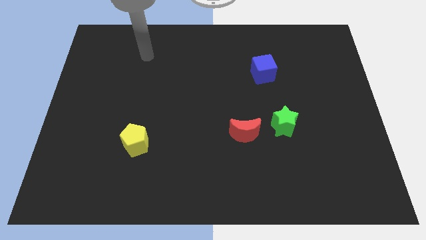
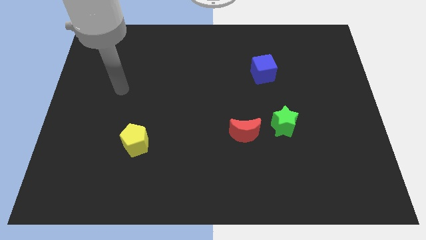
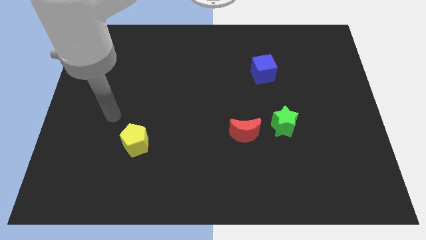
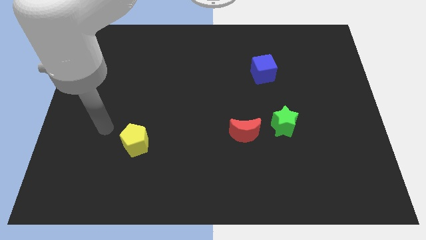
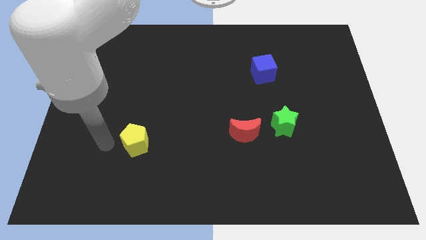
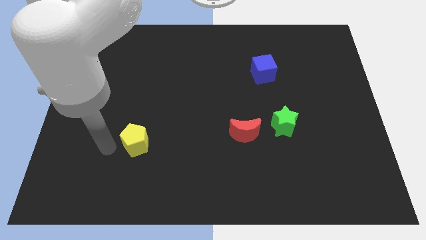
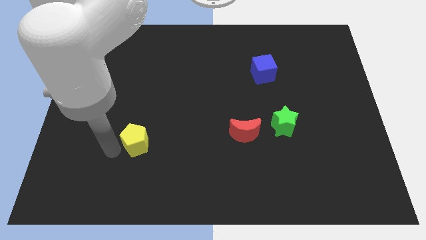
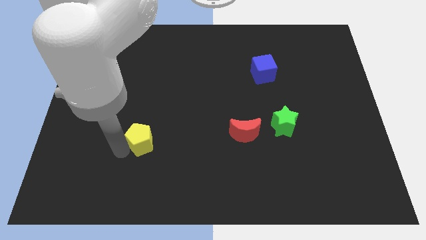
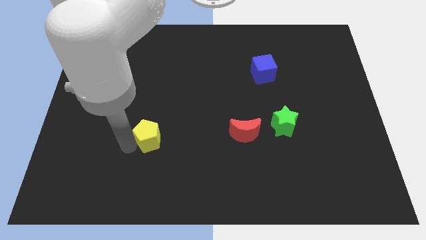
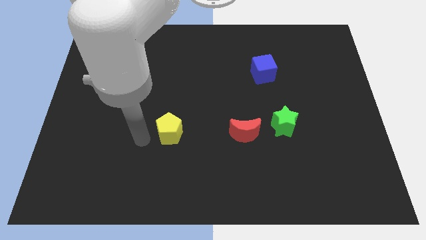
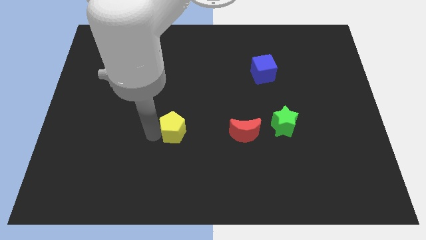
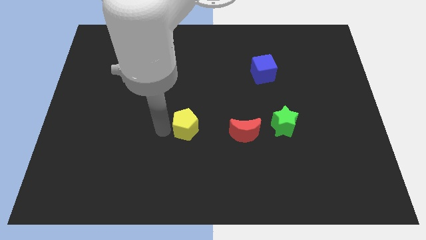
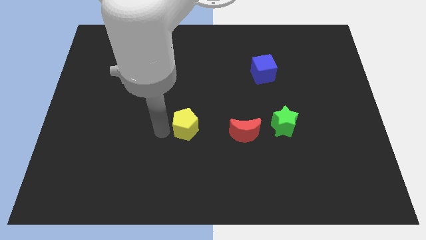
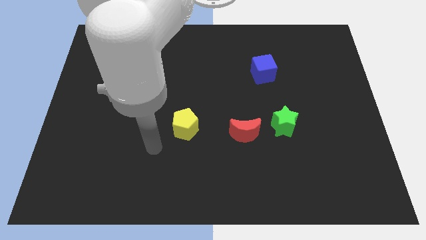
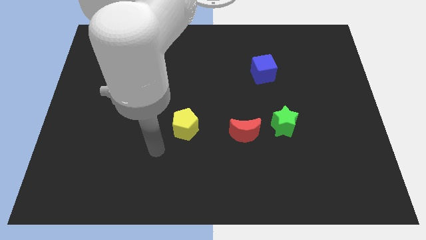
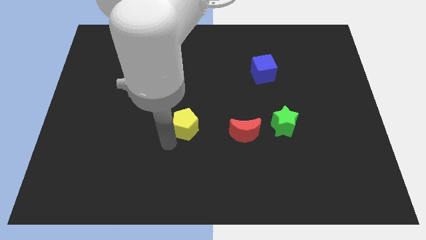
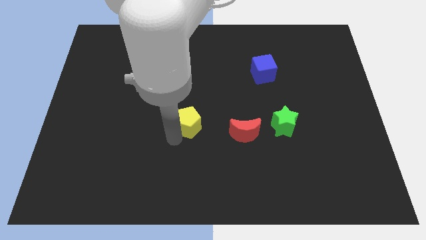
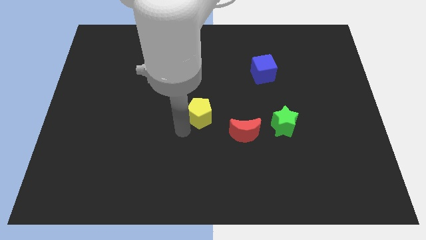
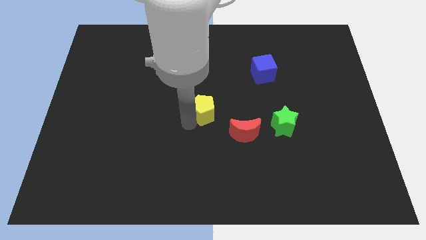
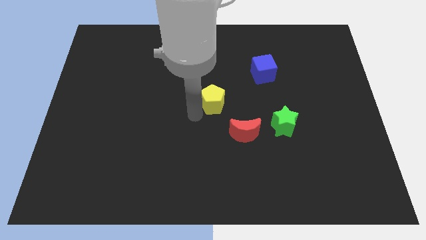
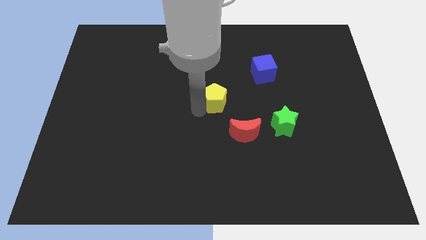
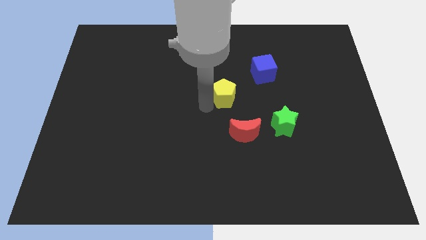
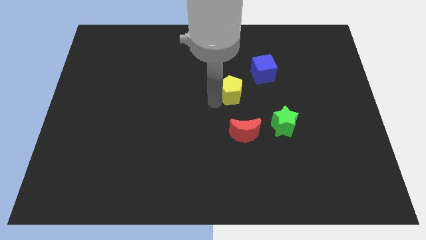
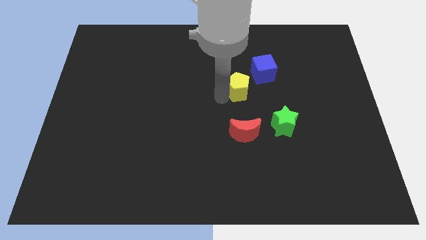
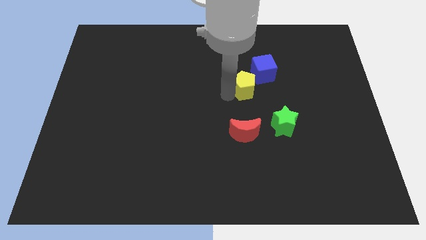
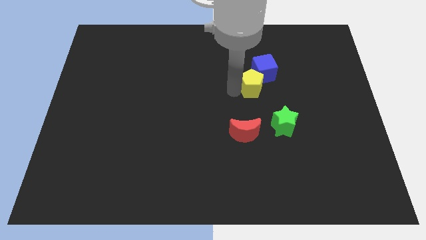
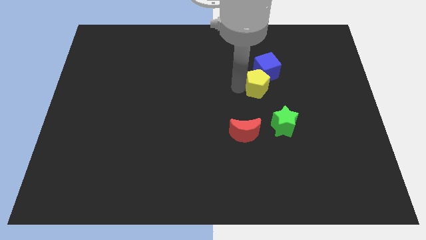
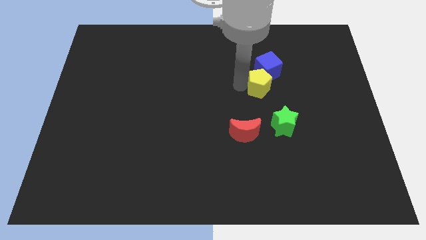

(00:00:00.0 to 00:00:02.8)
push the yellow pentagon next to the blue cube

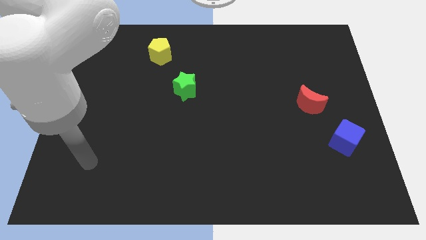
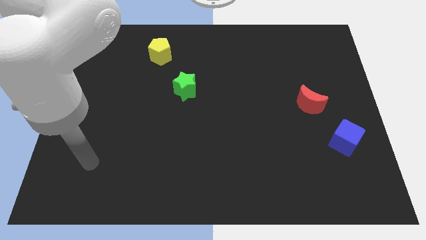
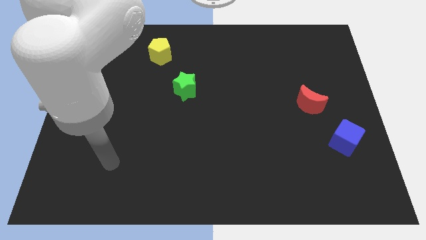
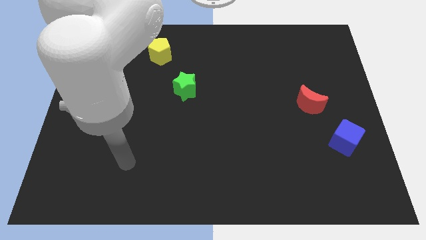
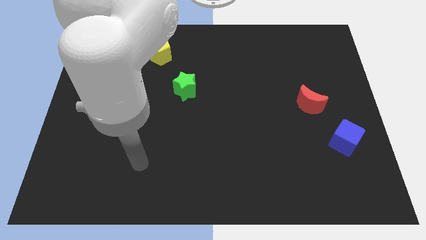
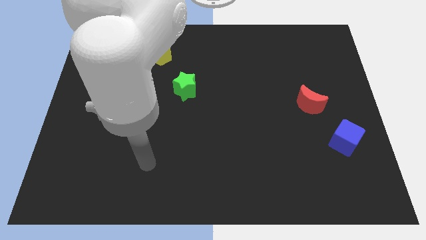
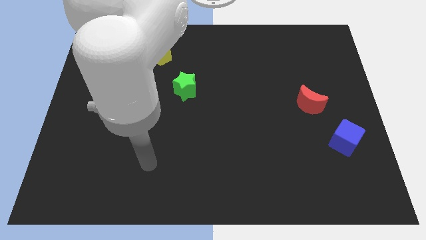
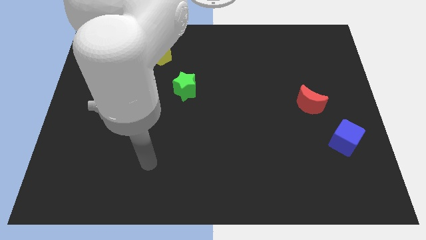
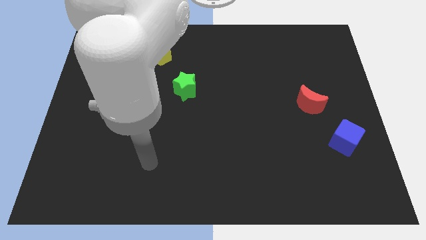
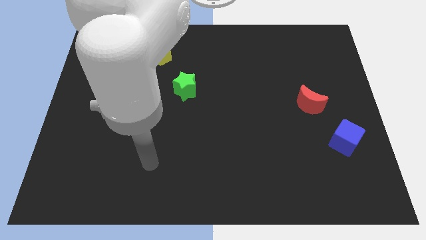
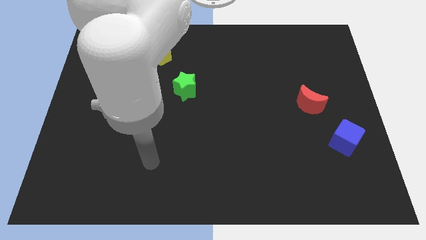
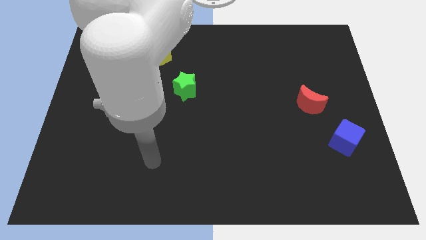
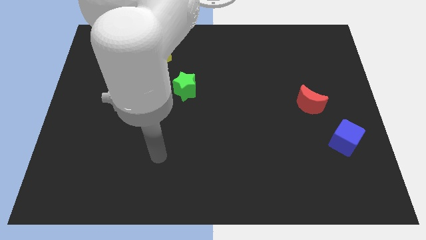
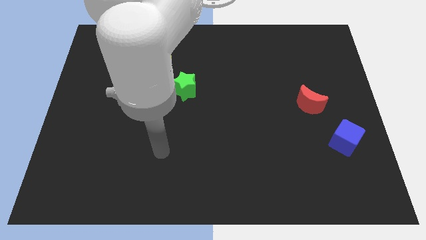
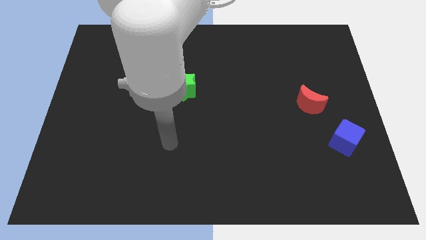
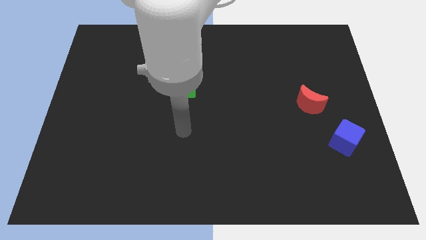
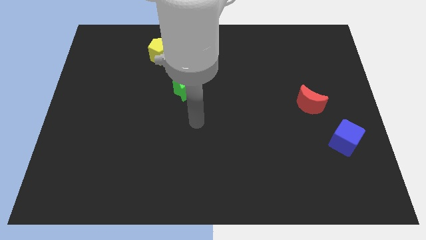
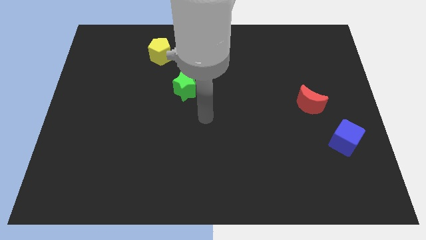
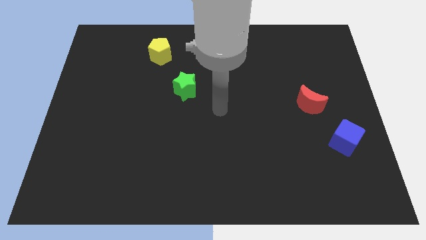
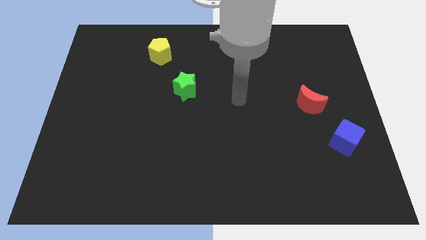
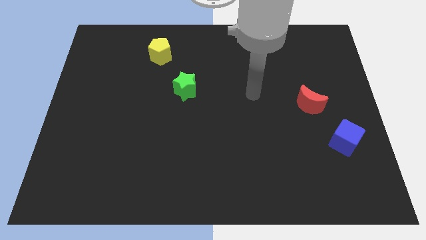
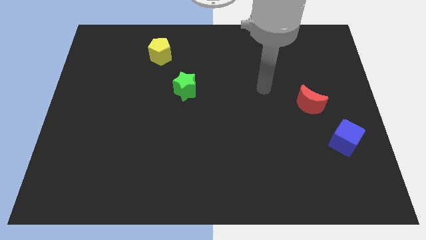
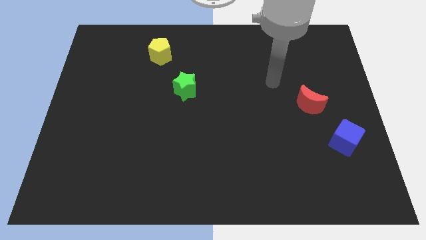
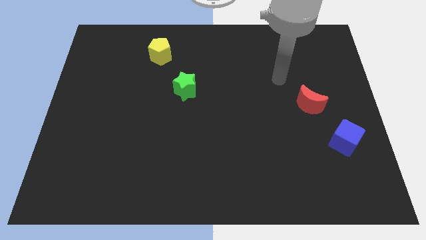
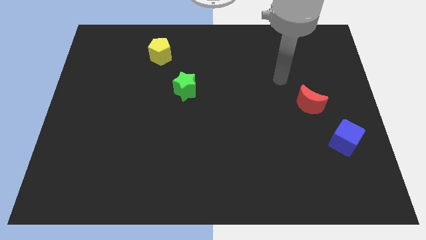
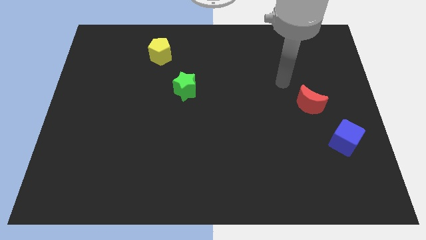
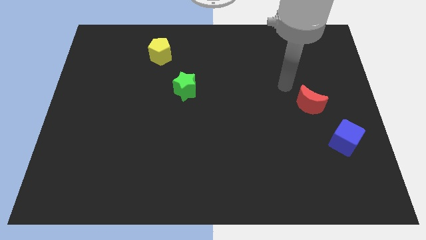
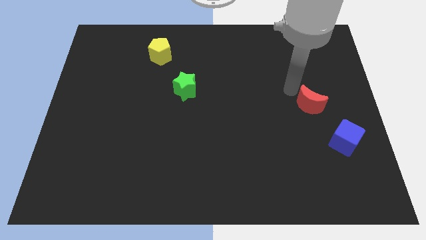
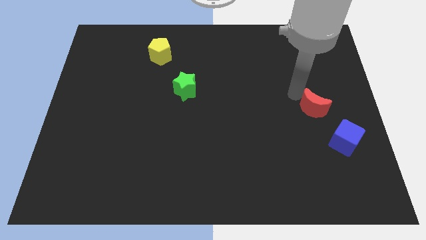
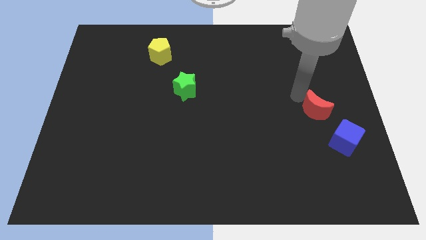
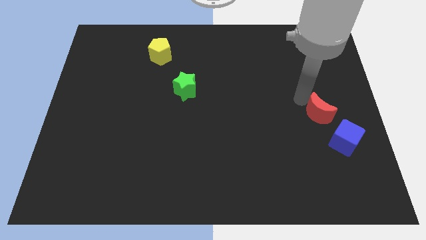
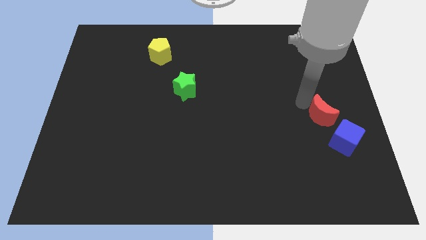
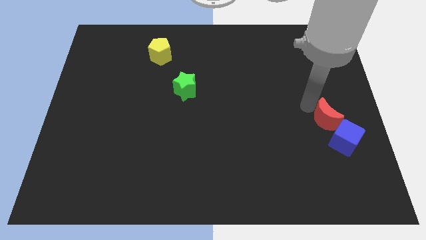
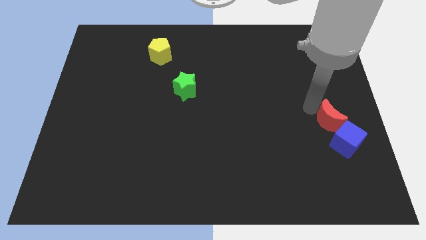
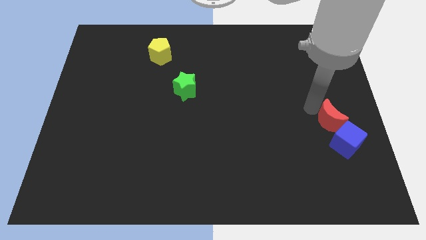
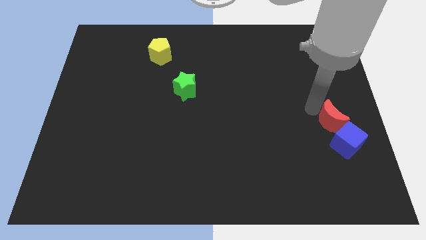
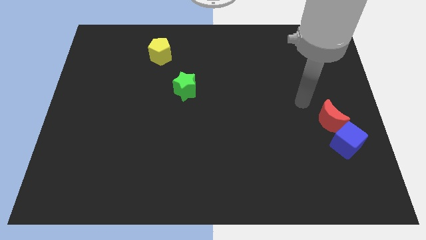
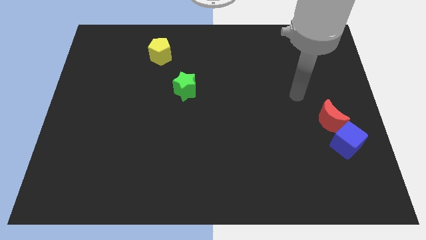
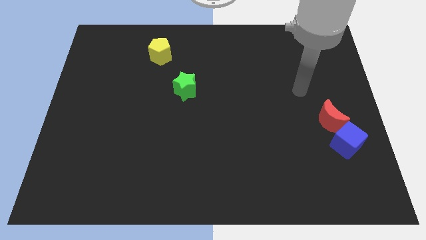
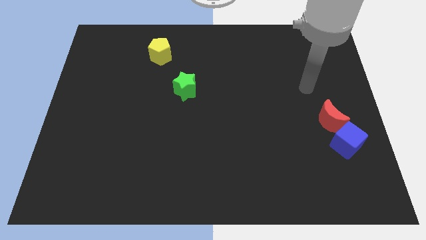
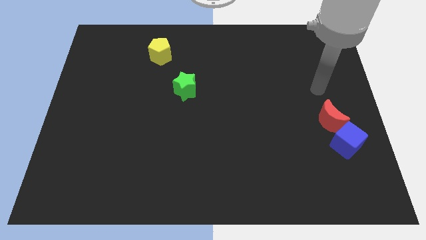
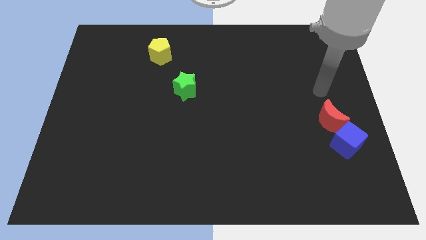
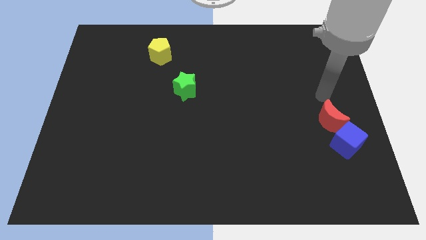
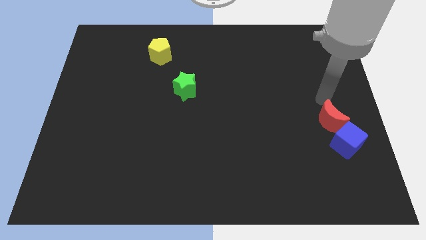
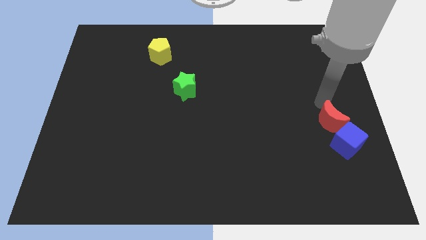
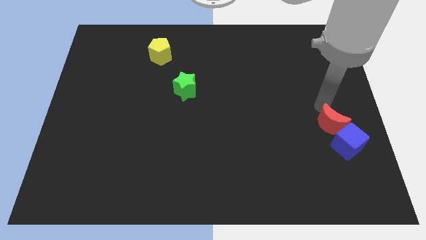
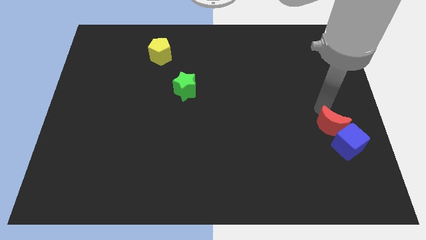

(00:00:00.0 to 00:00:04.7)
push the red moon towards the blue cube

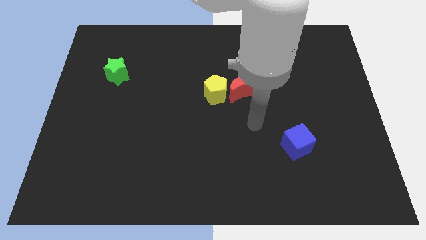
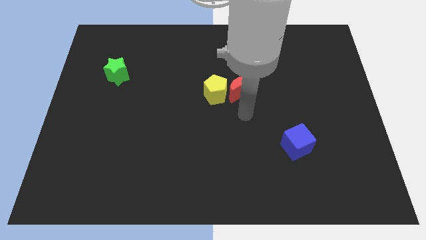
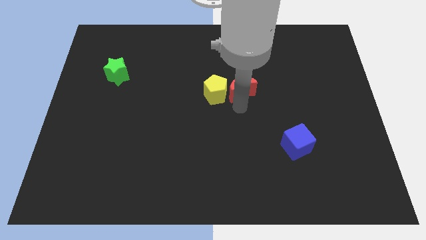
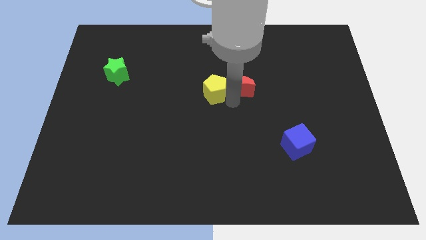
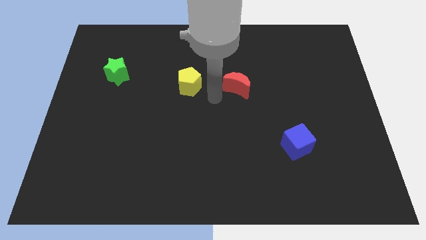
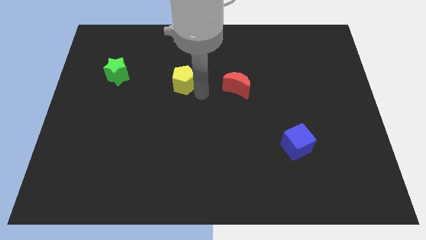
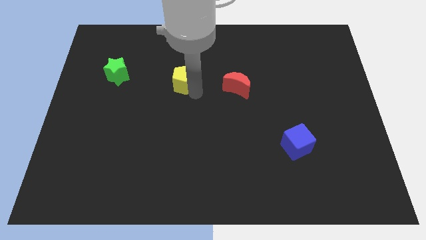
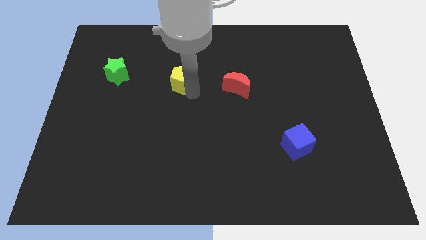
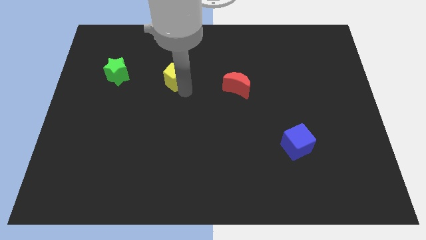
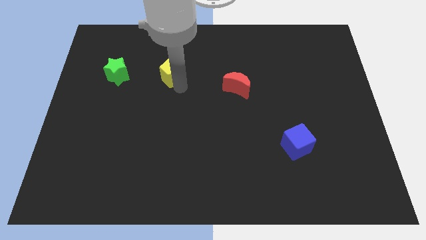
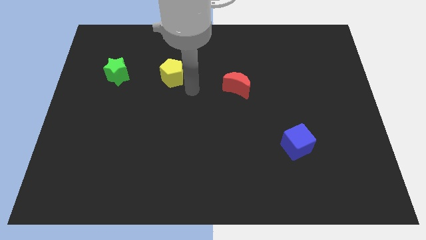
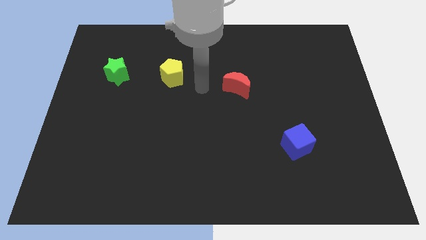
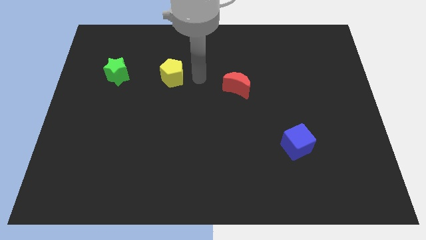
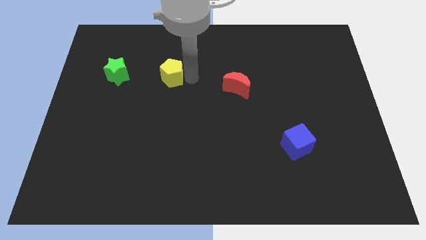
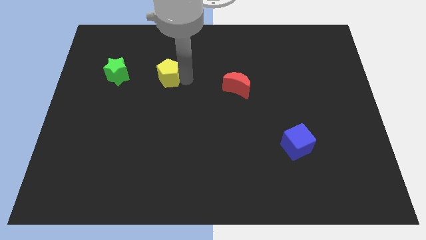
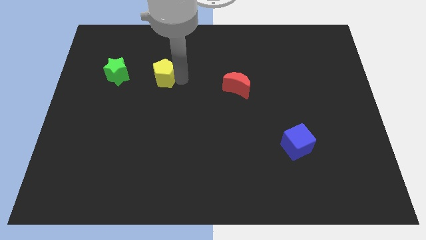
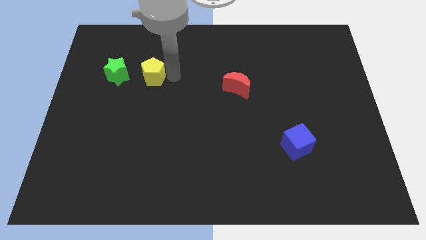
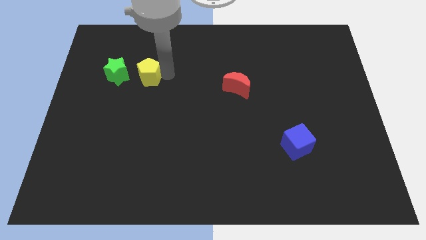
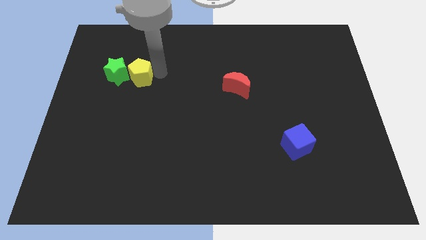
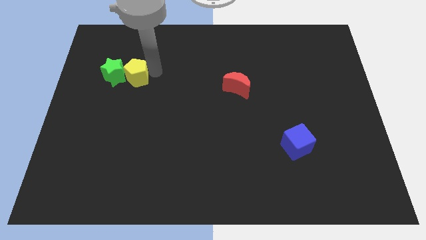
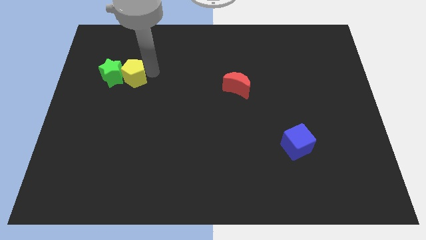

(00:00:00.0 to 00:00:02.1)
push the yellow pentagon towards the green star
